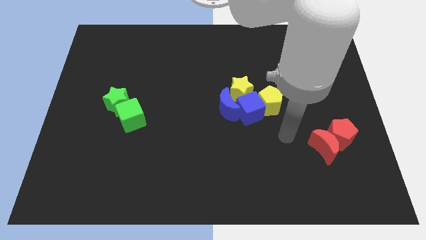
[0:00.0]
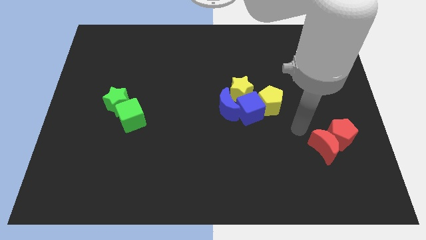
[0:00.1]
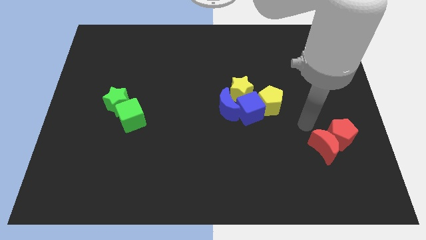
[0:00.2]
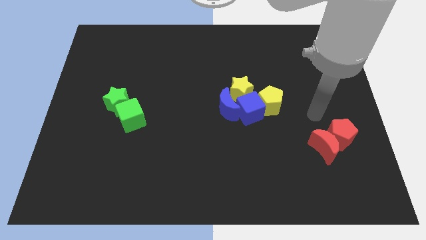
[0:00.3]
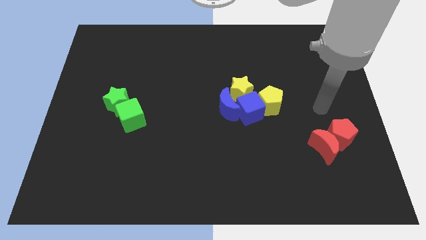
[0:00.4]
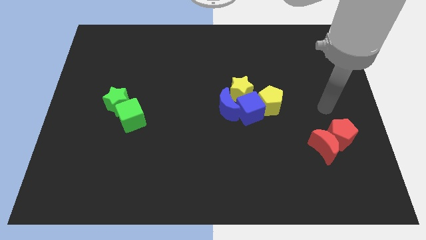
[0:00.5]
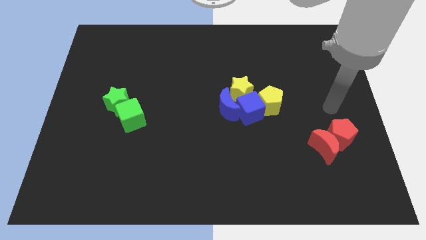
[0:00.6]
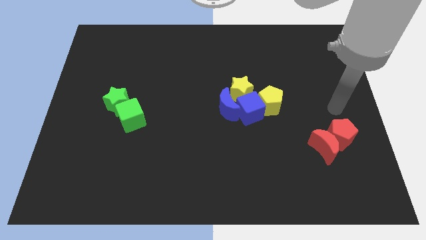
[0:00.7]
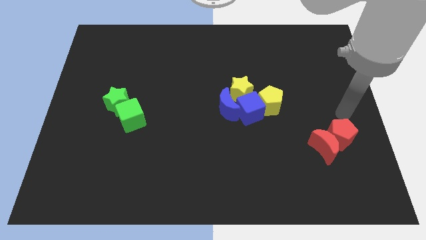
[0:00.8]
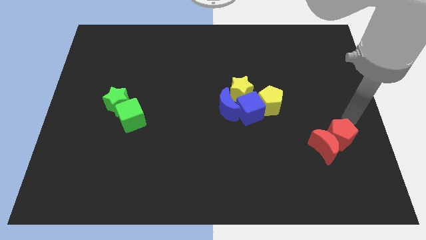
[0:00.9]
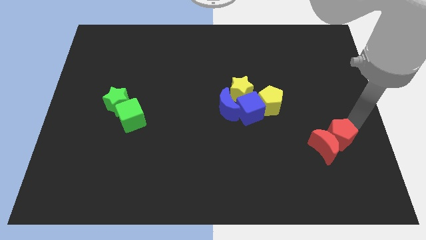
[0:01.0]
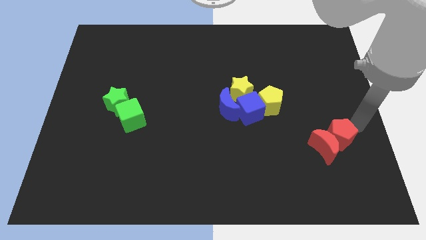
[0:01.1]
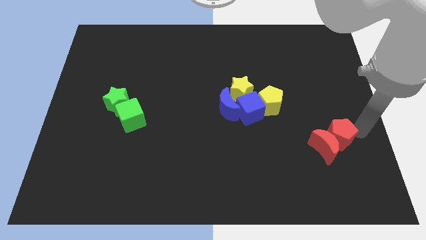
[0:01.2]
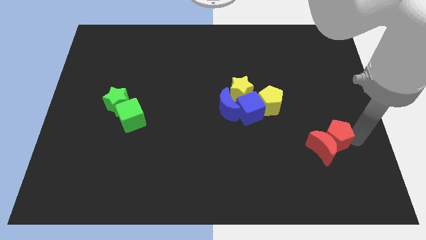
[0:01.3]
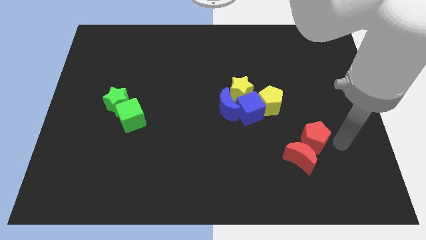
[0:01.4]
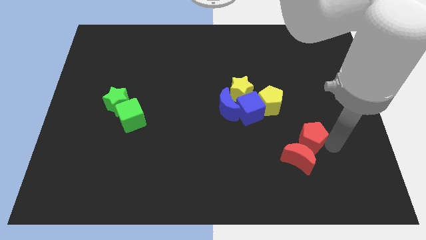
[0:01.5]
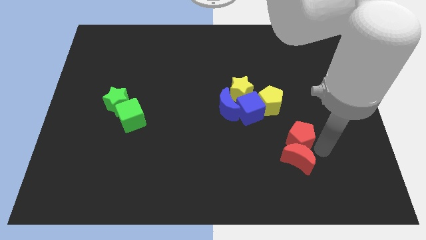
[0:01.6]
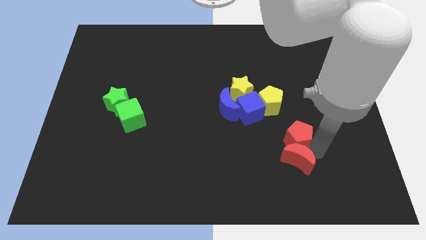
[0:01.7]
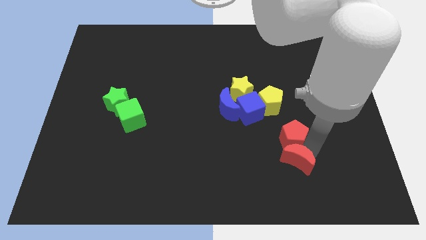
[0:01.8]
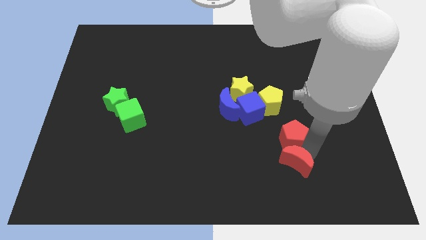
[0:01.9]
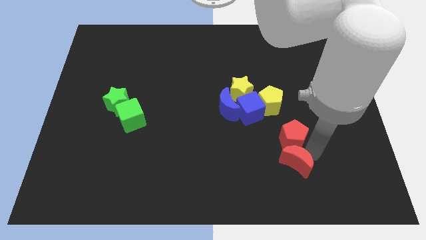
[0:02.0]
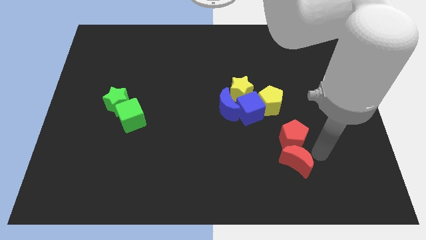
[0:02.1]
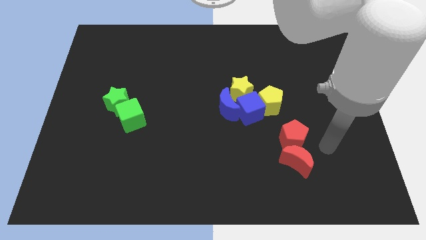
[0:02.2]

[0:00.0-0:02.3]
push the red moon with the red pentagon of the board

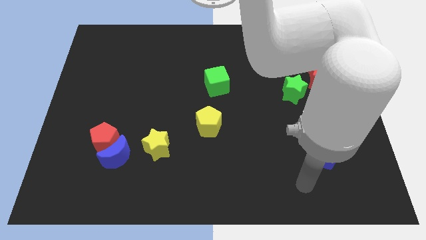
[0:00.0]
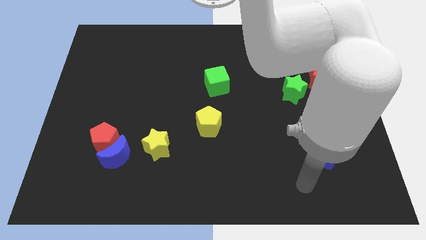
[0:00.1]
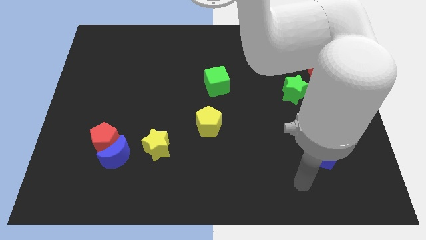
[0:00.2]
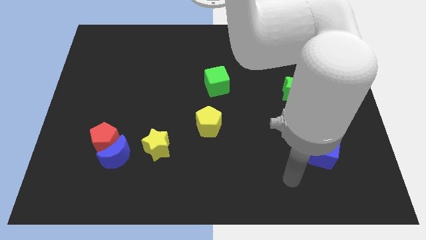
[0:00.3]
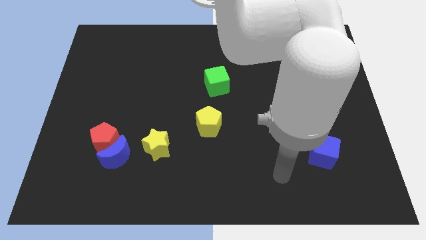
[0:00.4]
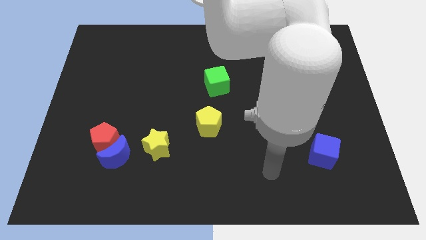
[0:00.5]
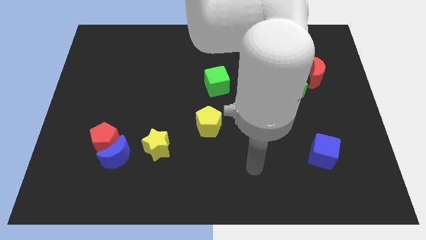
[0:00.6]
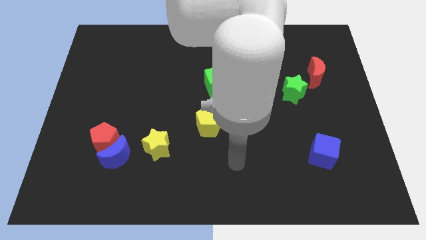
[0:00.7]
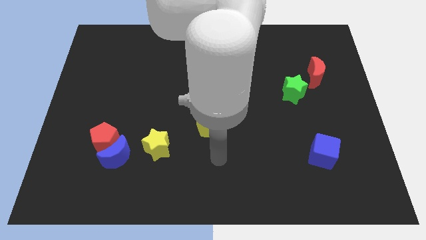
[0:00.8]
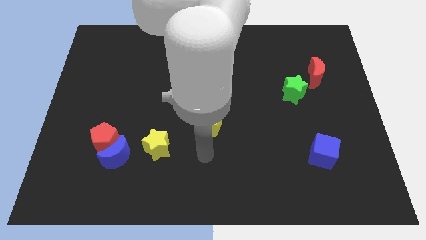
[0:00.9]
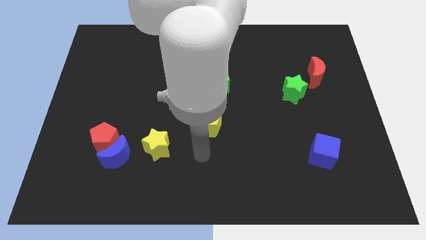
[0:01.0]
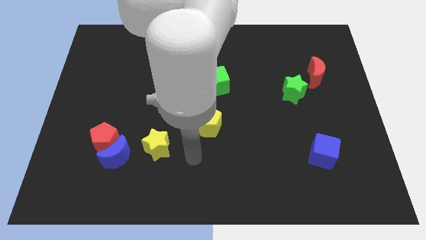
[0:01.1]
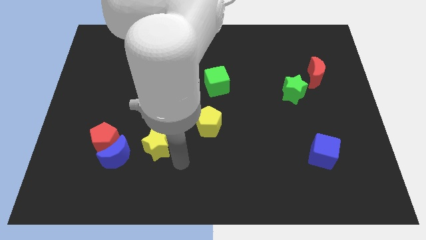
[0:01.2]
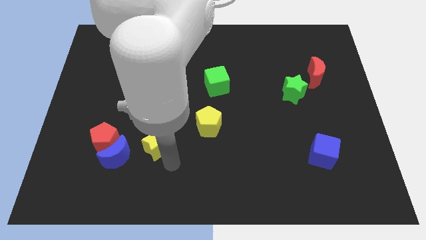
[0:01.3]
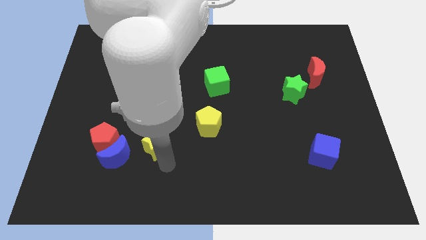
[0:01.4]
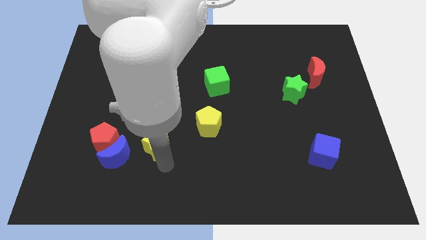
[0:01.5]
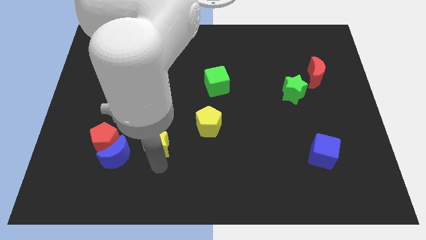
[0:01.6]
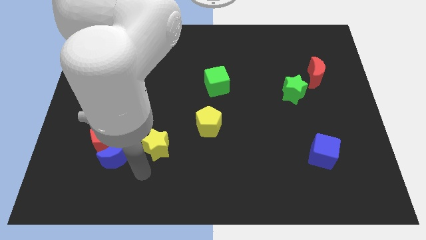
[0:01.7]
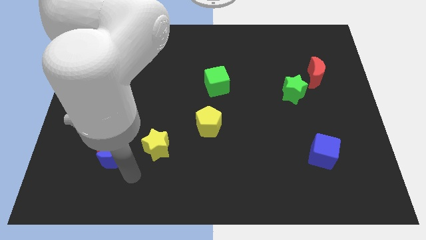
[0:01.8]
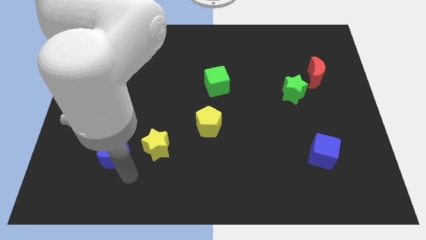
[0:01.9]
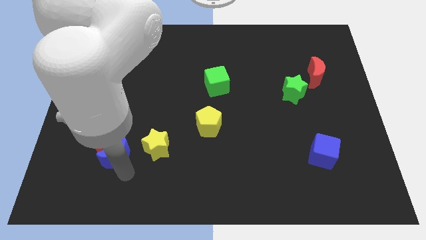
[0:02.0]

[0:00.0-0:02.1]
move the arm at the bottom right of the blue crescent

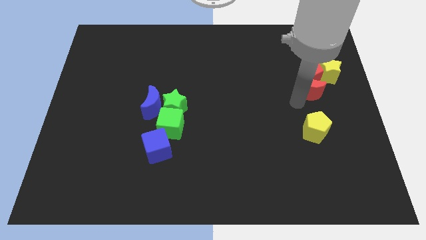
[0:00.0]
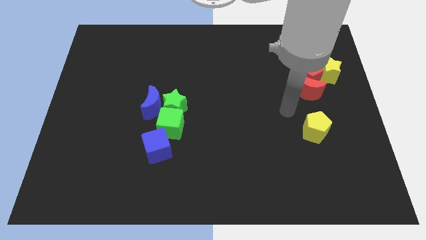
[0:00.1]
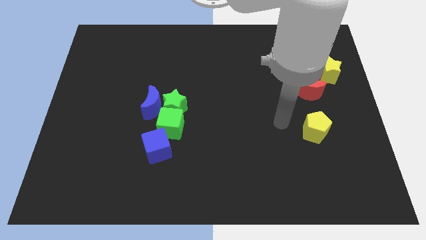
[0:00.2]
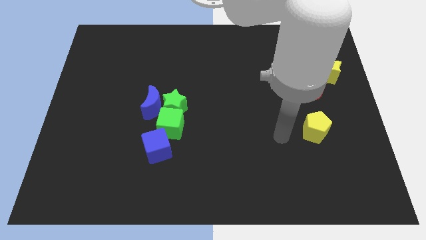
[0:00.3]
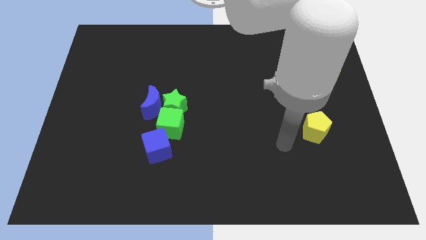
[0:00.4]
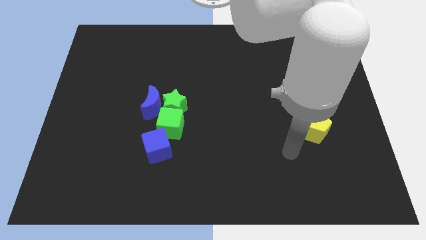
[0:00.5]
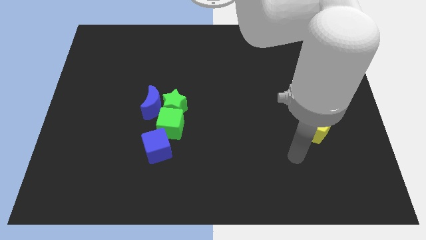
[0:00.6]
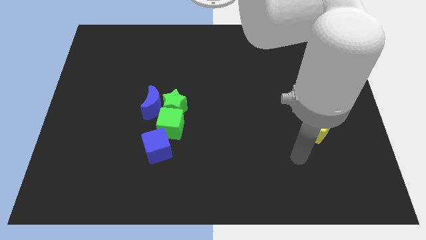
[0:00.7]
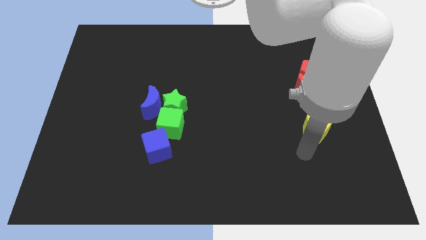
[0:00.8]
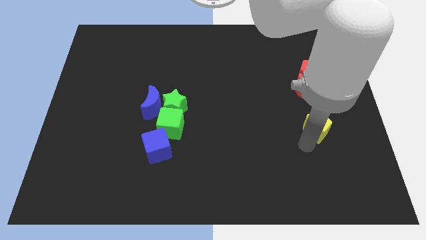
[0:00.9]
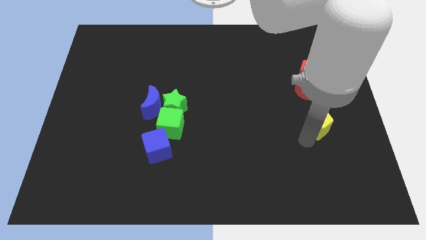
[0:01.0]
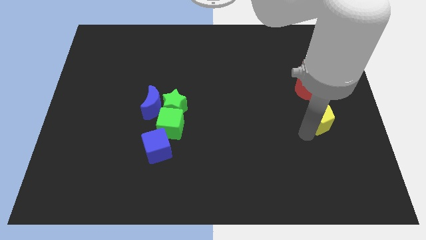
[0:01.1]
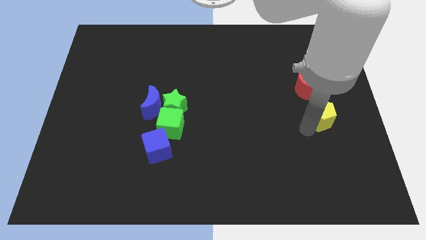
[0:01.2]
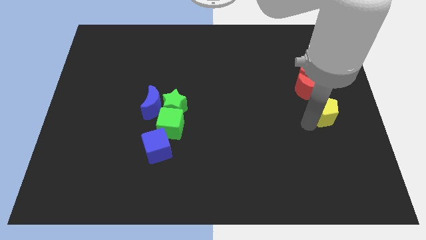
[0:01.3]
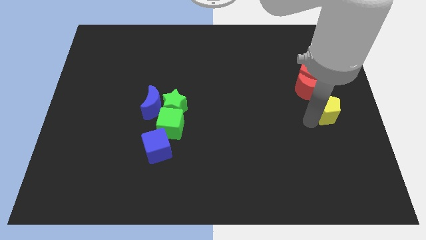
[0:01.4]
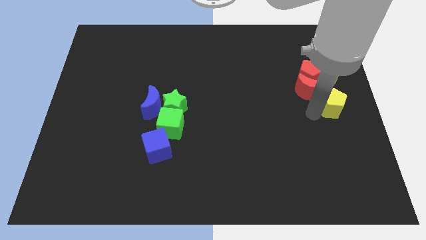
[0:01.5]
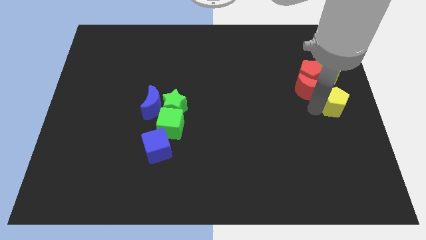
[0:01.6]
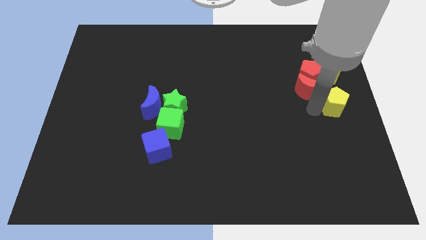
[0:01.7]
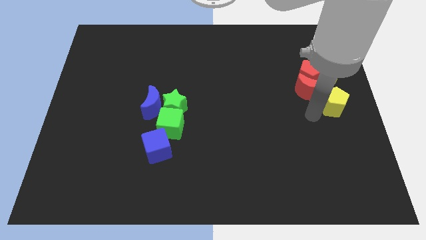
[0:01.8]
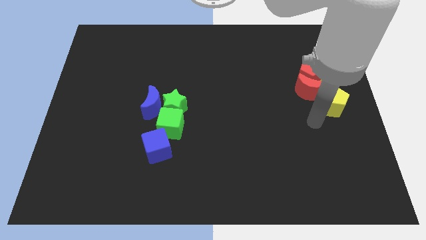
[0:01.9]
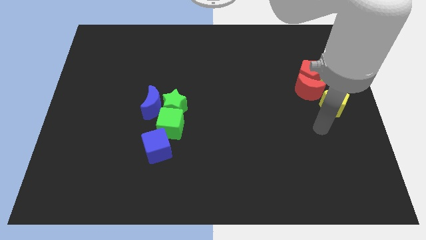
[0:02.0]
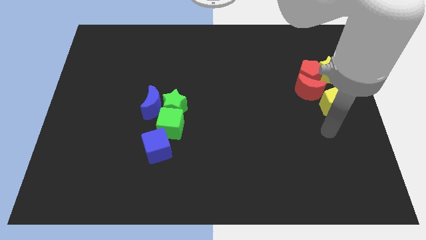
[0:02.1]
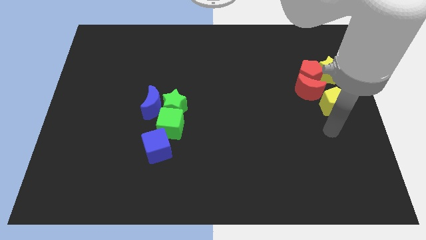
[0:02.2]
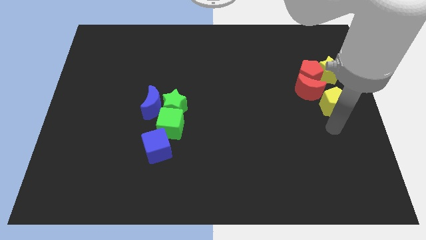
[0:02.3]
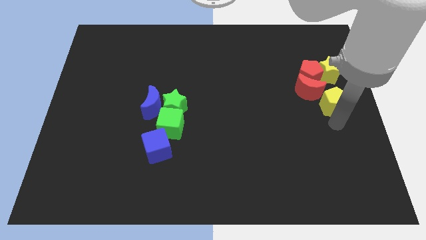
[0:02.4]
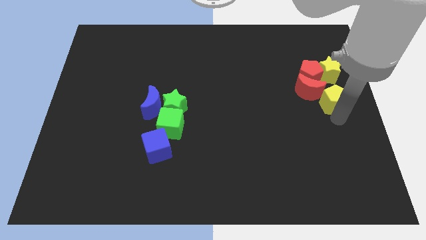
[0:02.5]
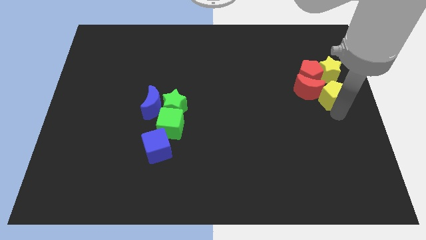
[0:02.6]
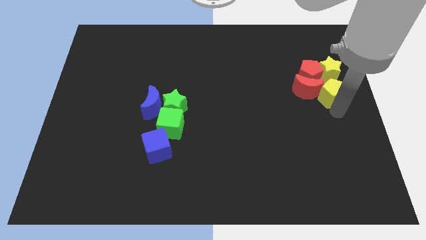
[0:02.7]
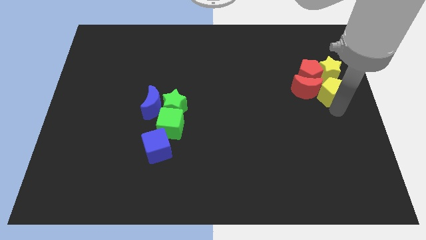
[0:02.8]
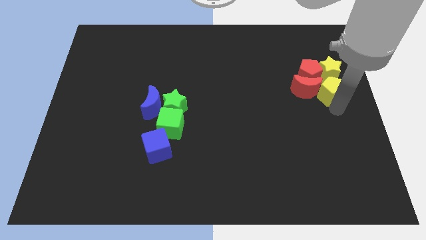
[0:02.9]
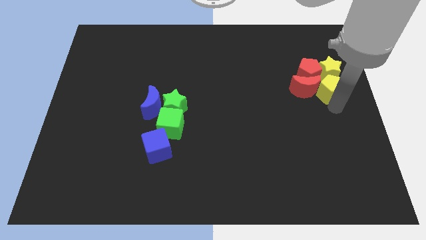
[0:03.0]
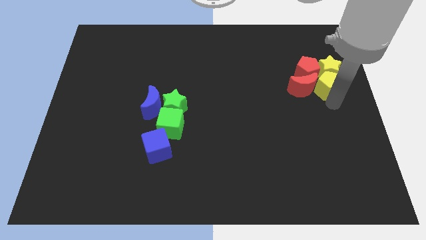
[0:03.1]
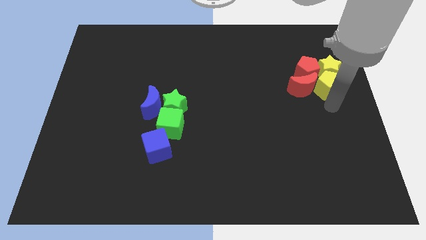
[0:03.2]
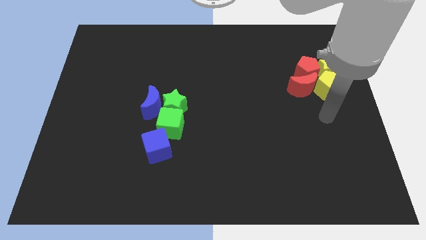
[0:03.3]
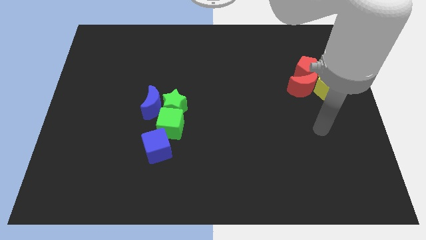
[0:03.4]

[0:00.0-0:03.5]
push the yellow pentagon towards group of blocks

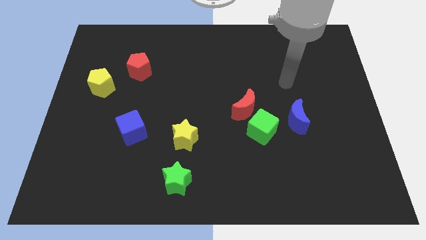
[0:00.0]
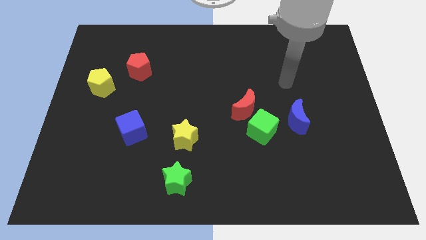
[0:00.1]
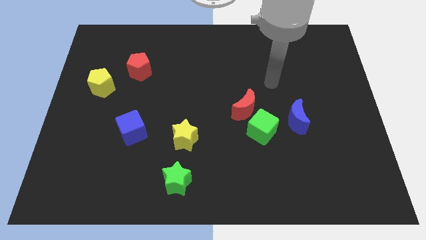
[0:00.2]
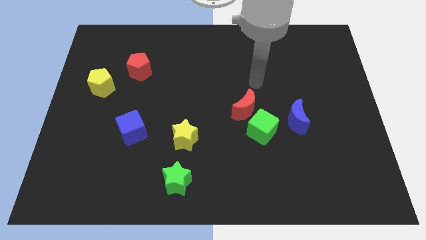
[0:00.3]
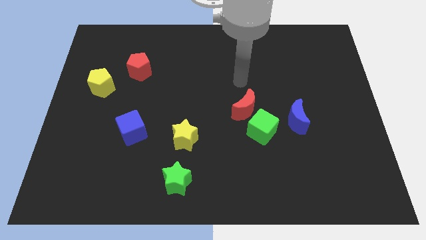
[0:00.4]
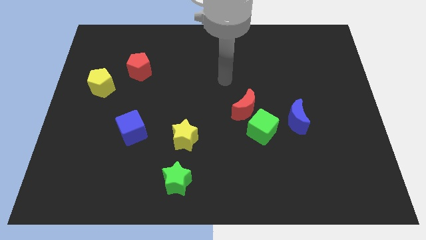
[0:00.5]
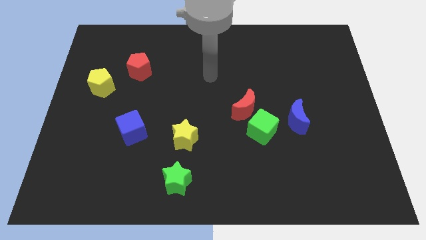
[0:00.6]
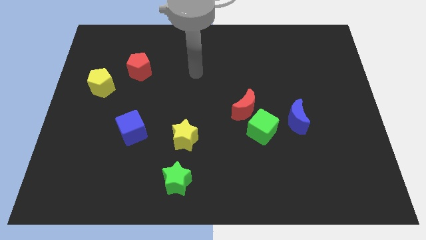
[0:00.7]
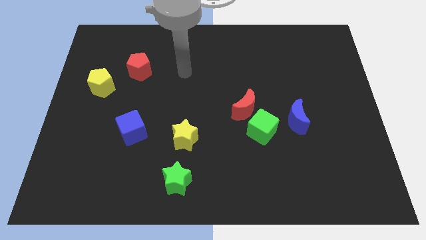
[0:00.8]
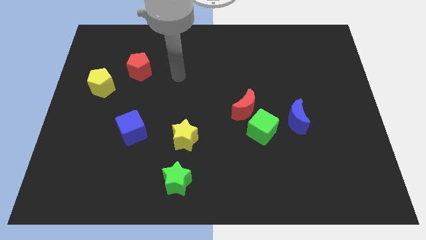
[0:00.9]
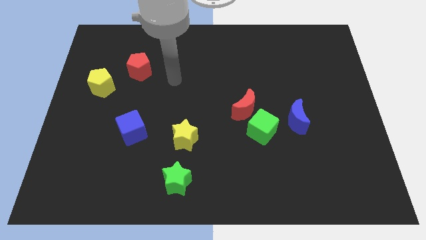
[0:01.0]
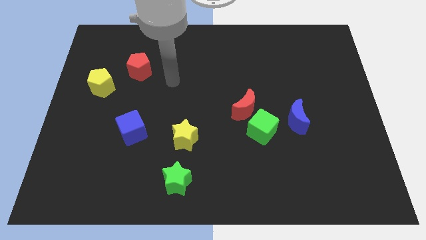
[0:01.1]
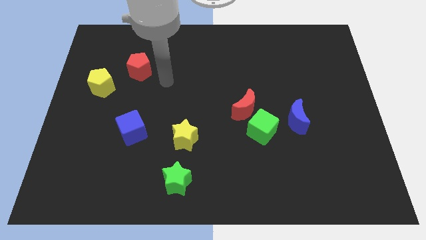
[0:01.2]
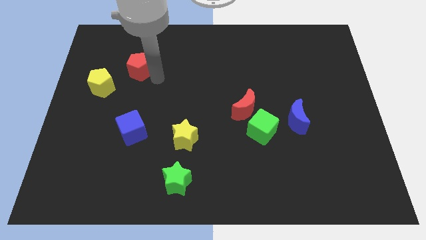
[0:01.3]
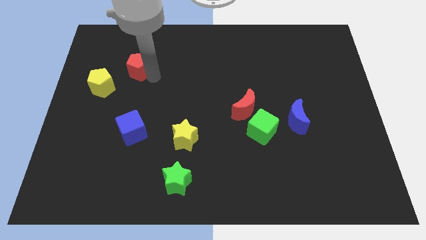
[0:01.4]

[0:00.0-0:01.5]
place the arm near the red pentagon
